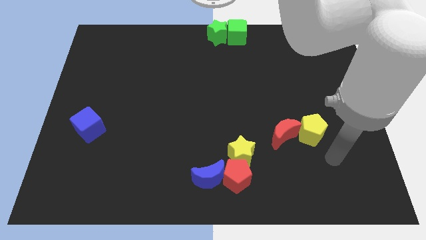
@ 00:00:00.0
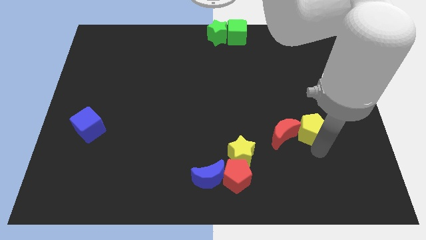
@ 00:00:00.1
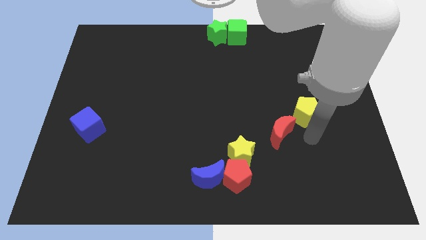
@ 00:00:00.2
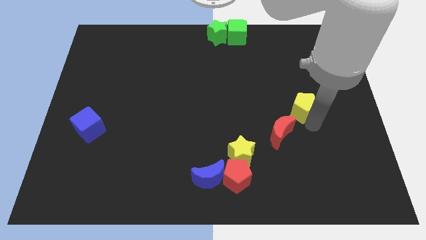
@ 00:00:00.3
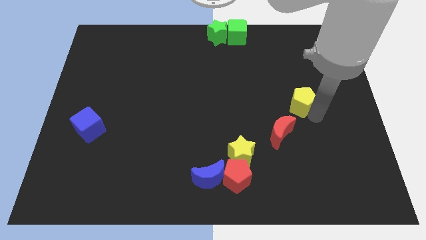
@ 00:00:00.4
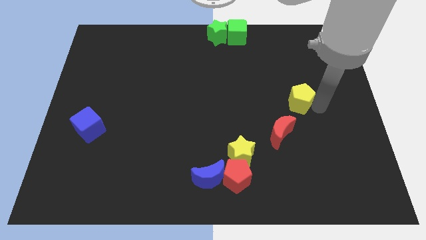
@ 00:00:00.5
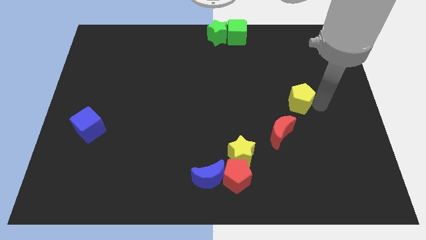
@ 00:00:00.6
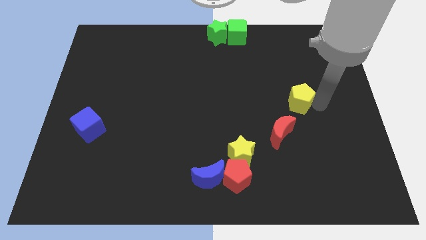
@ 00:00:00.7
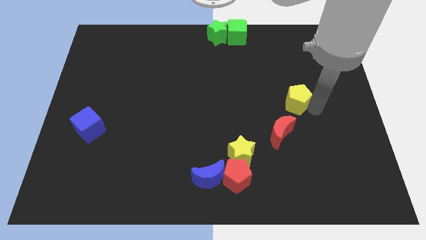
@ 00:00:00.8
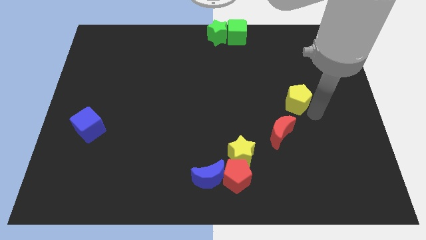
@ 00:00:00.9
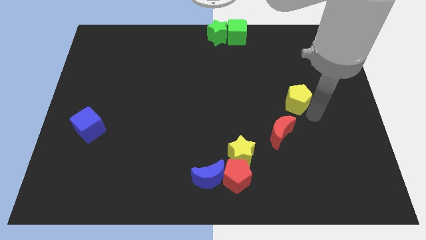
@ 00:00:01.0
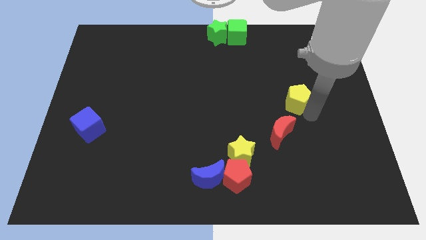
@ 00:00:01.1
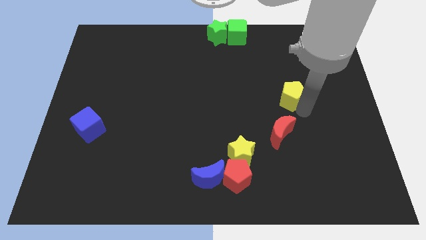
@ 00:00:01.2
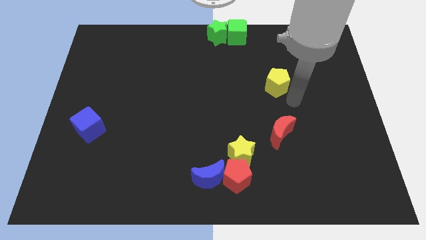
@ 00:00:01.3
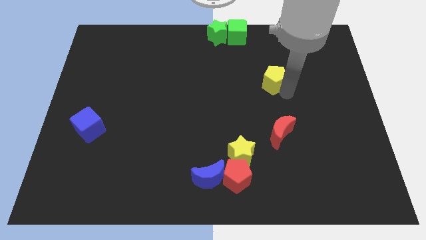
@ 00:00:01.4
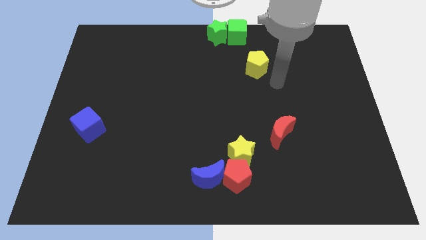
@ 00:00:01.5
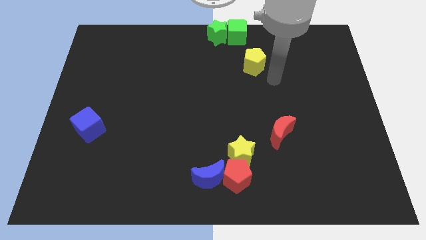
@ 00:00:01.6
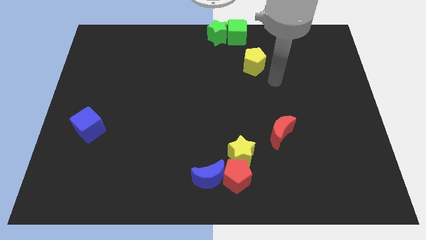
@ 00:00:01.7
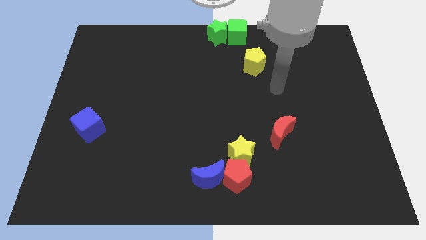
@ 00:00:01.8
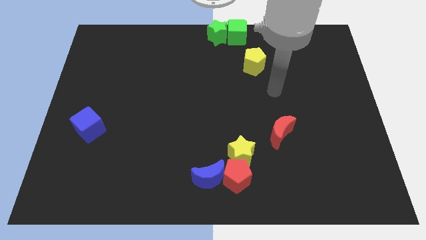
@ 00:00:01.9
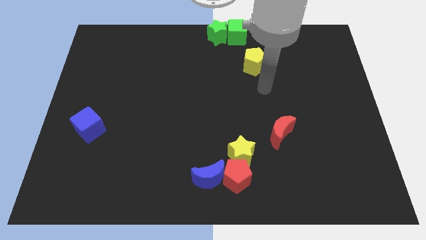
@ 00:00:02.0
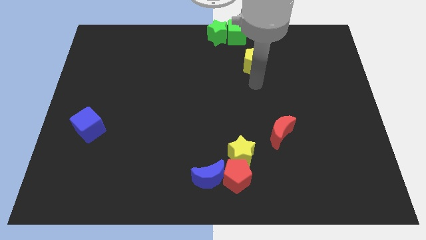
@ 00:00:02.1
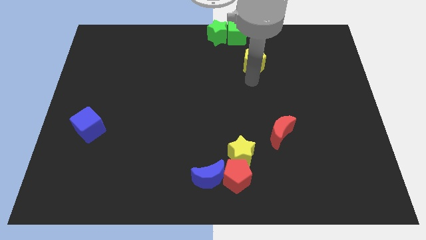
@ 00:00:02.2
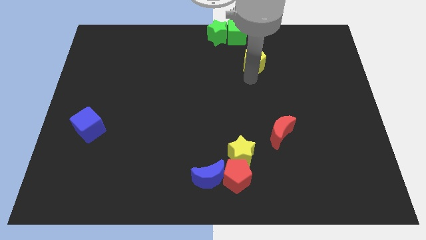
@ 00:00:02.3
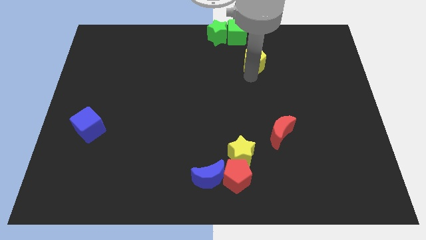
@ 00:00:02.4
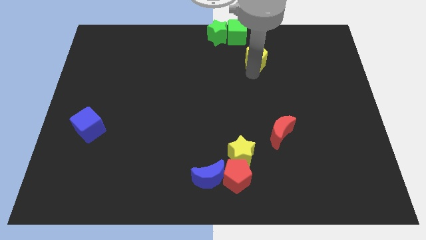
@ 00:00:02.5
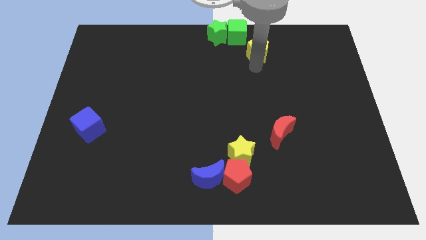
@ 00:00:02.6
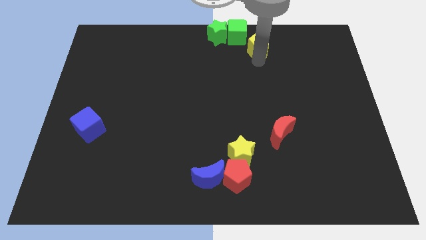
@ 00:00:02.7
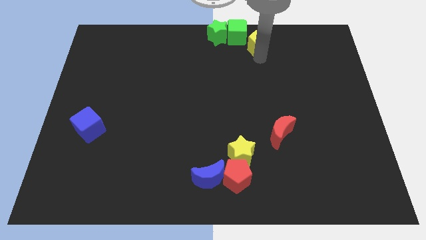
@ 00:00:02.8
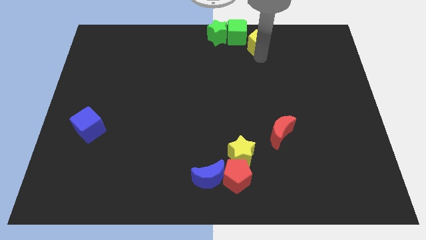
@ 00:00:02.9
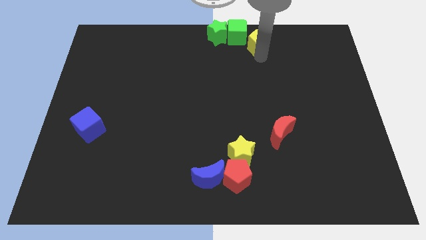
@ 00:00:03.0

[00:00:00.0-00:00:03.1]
push the yellow pentagon to the center top of the board

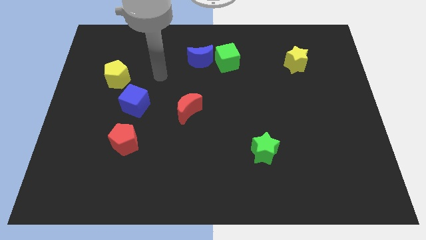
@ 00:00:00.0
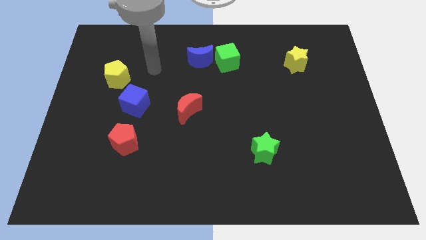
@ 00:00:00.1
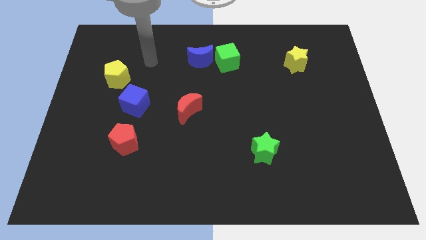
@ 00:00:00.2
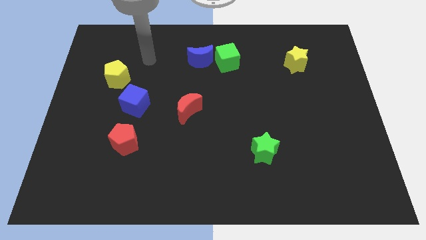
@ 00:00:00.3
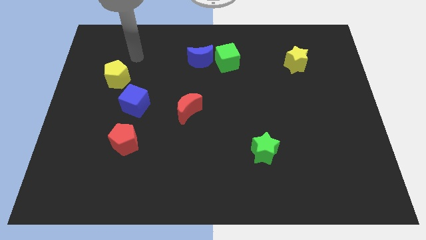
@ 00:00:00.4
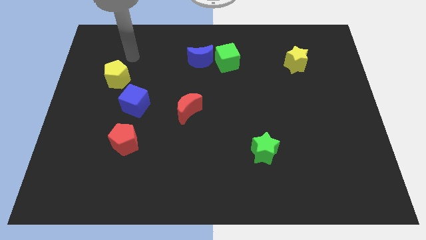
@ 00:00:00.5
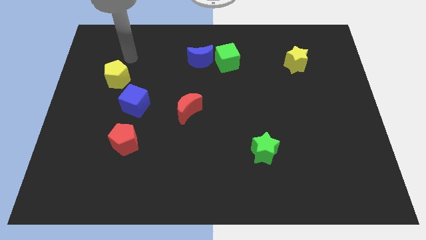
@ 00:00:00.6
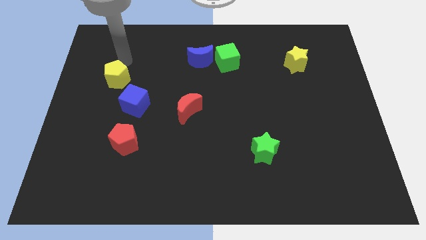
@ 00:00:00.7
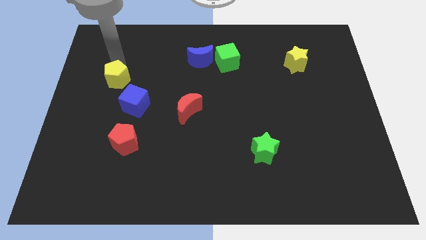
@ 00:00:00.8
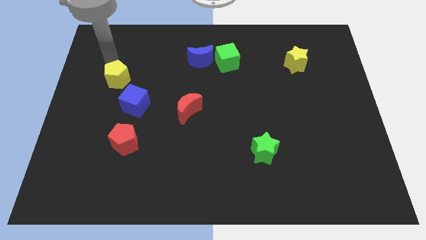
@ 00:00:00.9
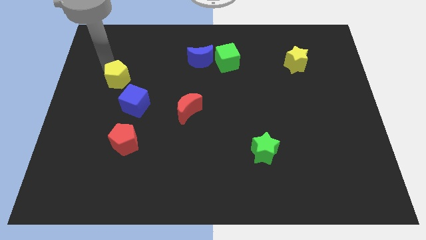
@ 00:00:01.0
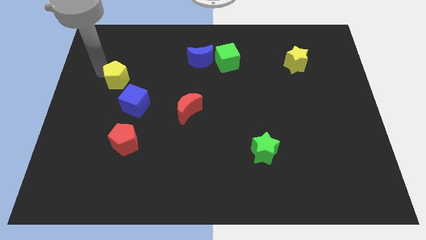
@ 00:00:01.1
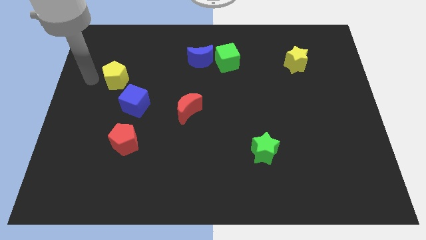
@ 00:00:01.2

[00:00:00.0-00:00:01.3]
touch the yellow pentagon

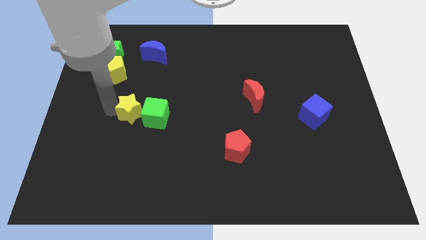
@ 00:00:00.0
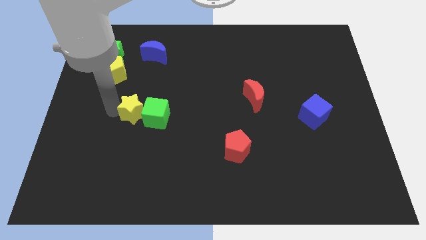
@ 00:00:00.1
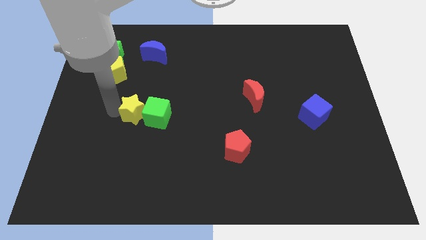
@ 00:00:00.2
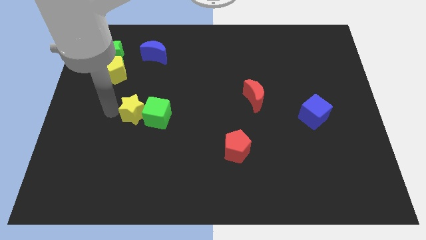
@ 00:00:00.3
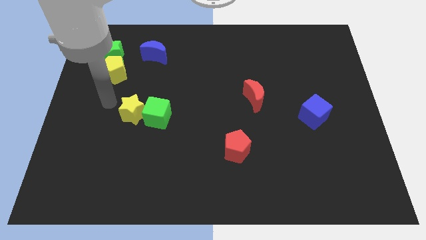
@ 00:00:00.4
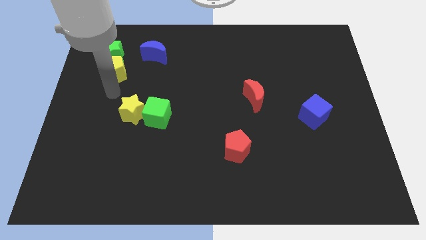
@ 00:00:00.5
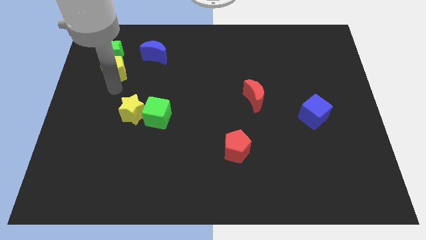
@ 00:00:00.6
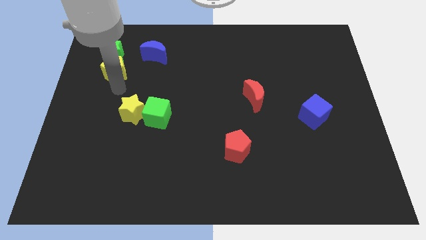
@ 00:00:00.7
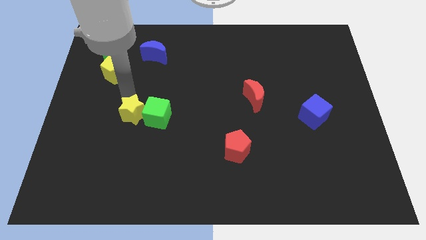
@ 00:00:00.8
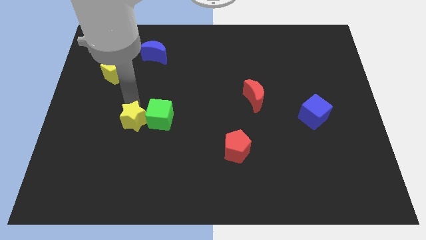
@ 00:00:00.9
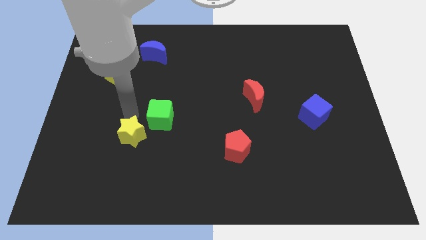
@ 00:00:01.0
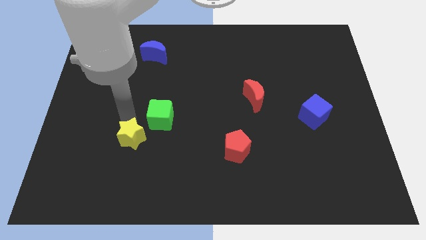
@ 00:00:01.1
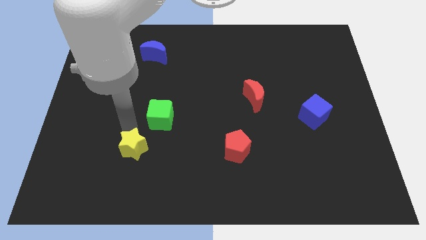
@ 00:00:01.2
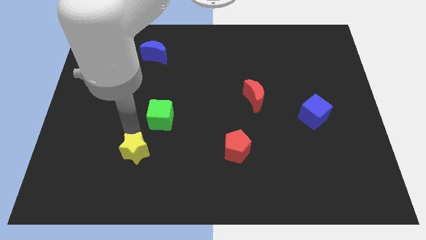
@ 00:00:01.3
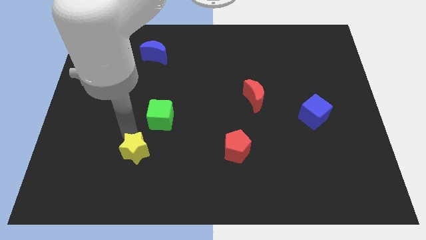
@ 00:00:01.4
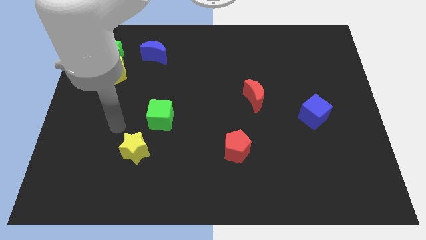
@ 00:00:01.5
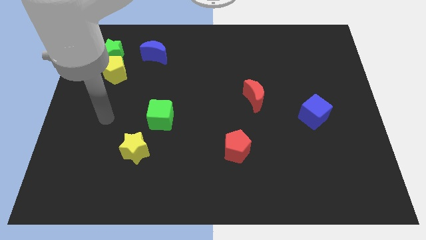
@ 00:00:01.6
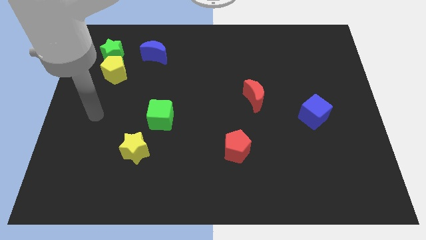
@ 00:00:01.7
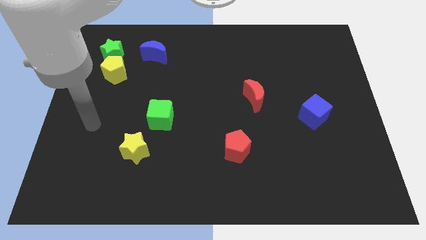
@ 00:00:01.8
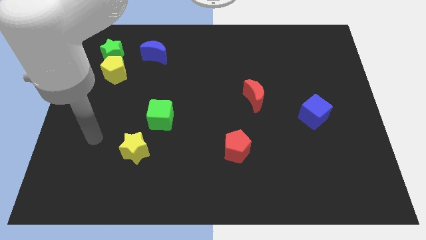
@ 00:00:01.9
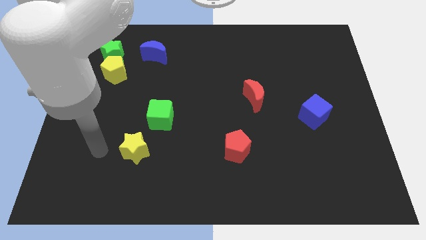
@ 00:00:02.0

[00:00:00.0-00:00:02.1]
move the yellow star away from the green cube

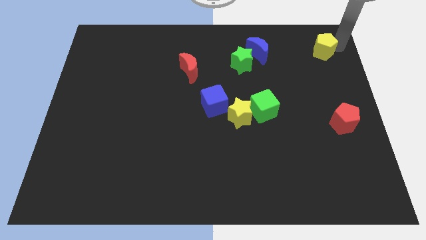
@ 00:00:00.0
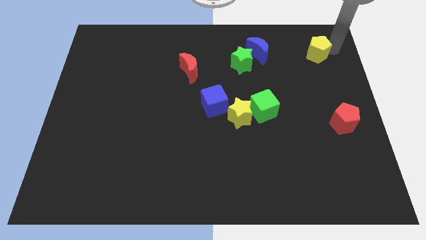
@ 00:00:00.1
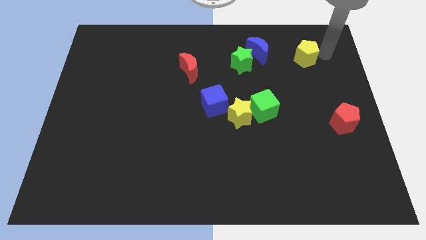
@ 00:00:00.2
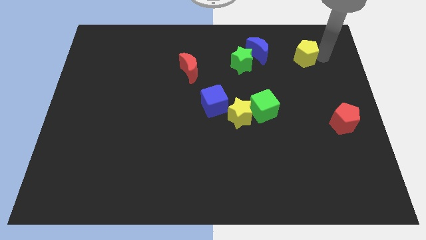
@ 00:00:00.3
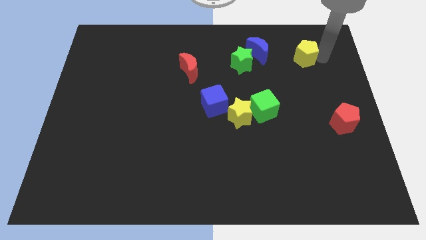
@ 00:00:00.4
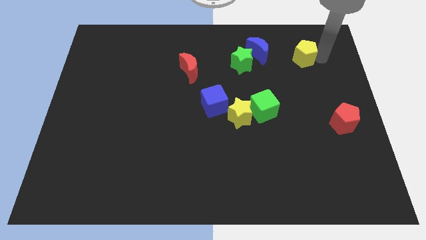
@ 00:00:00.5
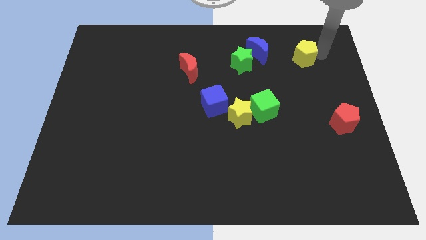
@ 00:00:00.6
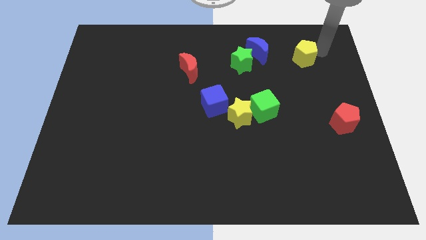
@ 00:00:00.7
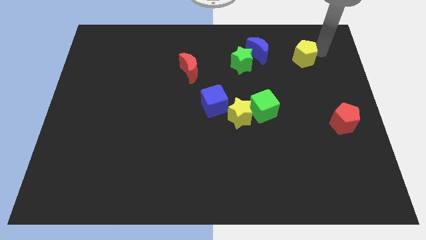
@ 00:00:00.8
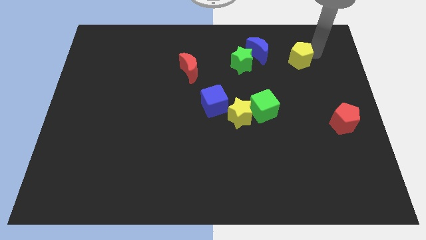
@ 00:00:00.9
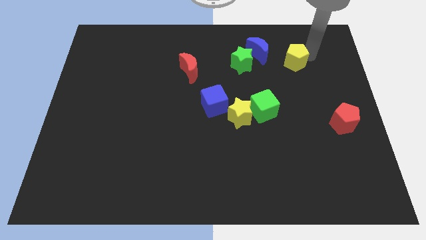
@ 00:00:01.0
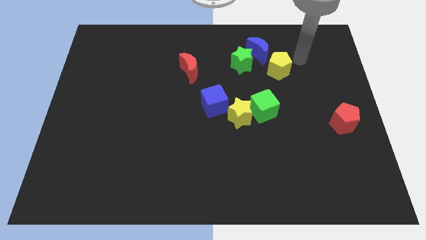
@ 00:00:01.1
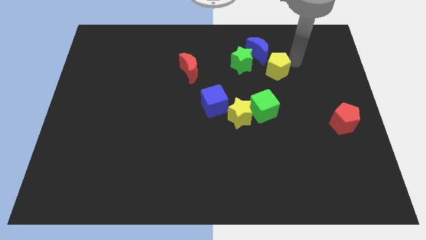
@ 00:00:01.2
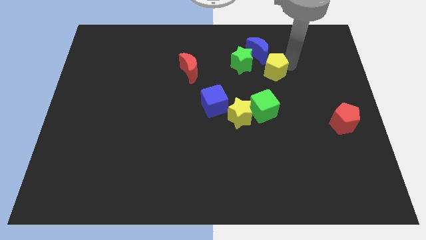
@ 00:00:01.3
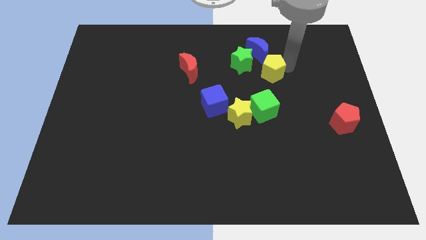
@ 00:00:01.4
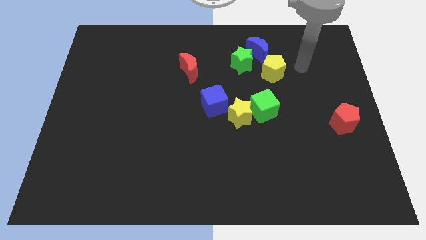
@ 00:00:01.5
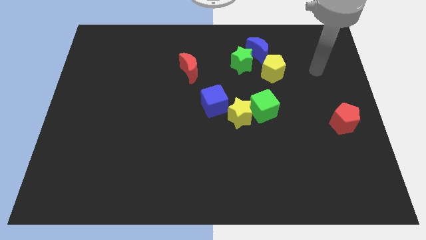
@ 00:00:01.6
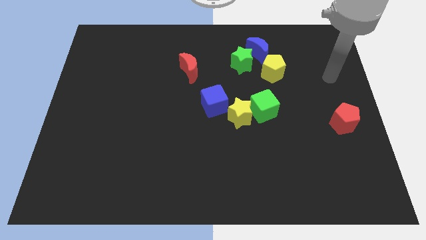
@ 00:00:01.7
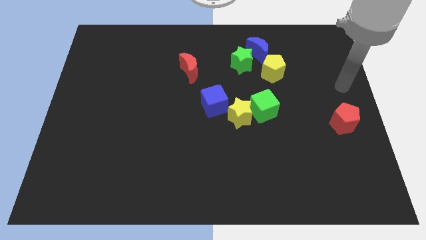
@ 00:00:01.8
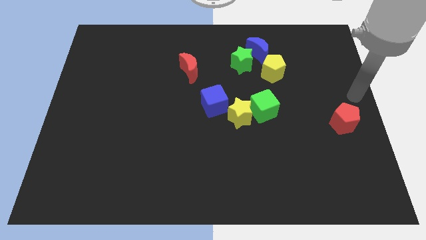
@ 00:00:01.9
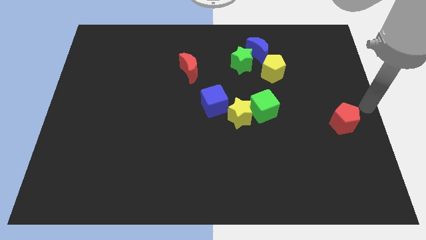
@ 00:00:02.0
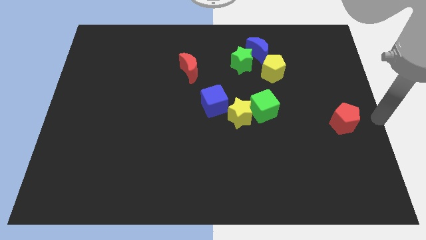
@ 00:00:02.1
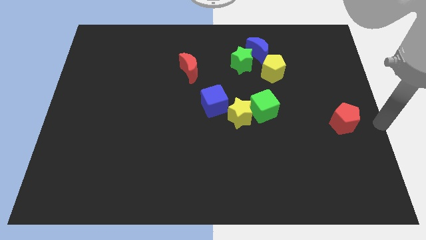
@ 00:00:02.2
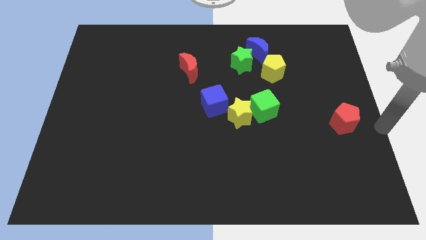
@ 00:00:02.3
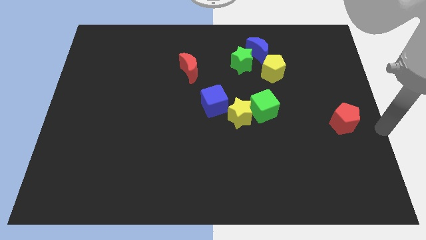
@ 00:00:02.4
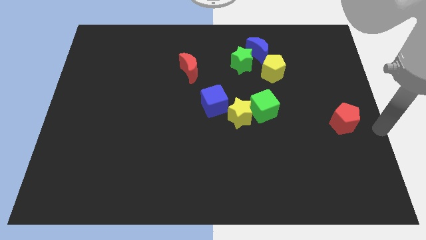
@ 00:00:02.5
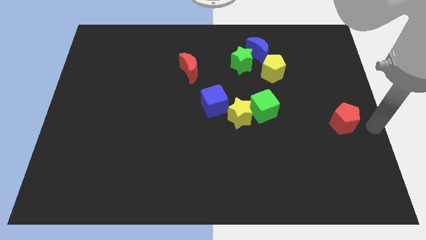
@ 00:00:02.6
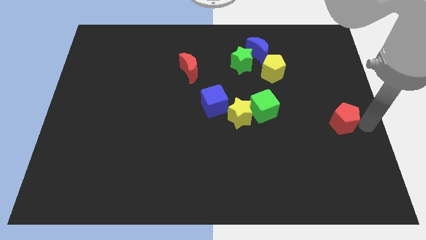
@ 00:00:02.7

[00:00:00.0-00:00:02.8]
place the arm right to the red pentagon
